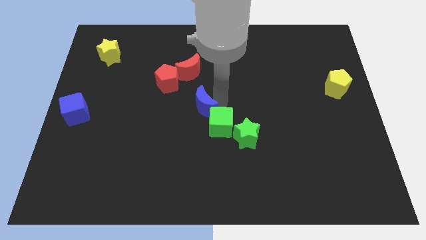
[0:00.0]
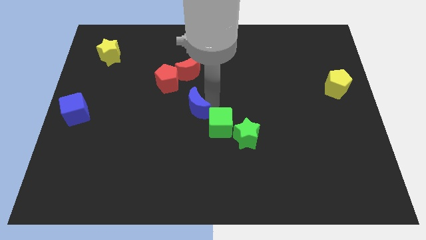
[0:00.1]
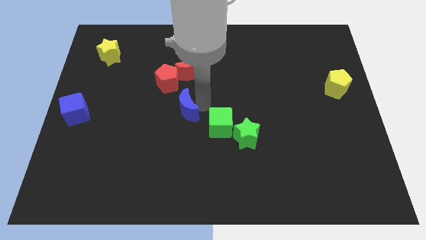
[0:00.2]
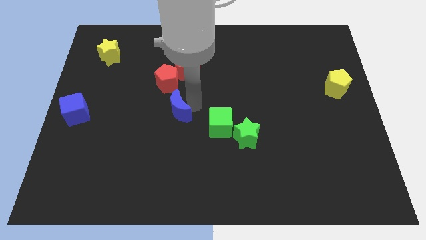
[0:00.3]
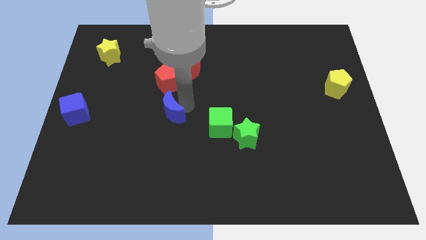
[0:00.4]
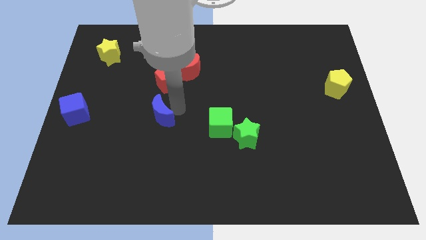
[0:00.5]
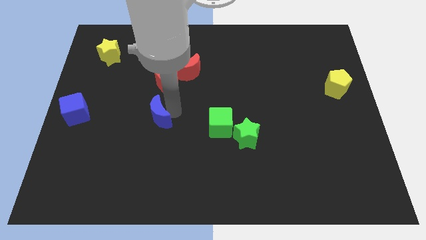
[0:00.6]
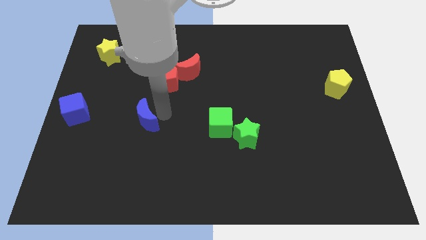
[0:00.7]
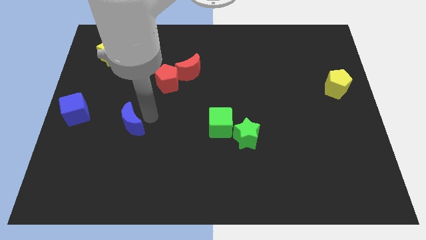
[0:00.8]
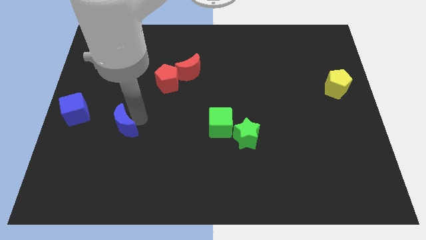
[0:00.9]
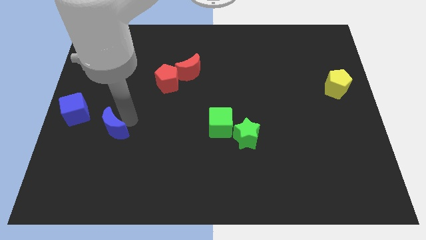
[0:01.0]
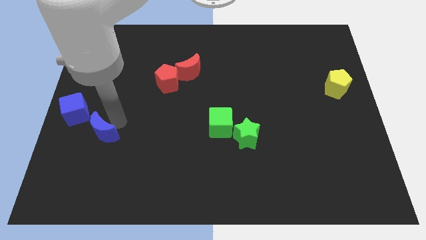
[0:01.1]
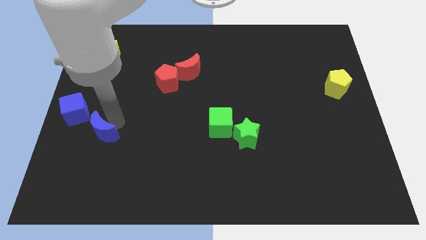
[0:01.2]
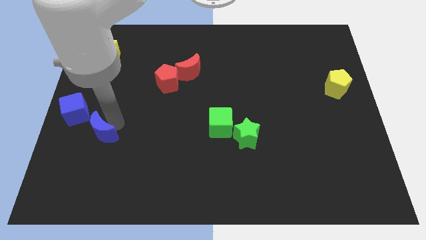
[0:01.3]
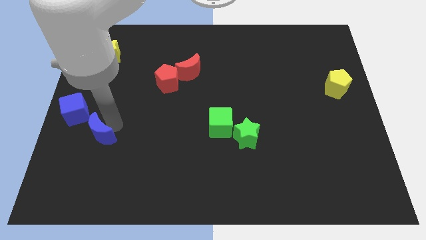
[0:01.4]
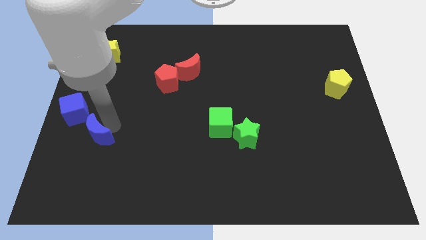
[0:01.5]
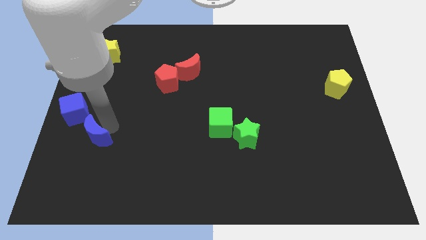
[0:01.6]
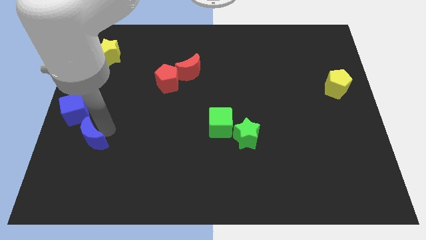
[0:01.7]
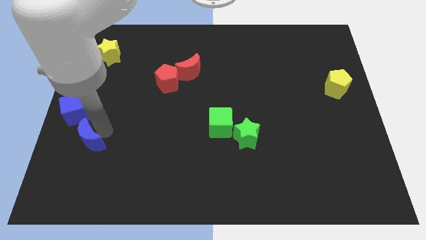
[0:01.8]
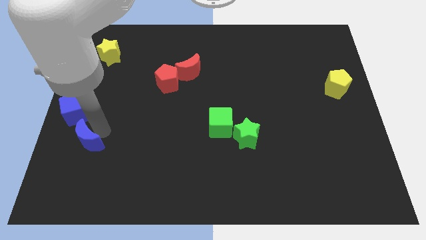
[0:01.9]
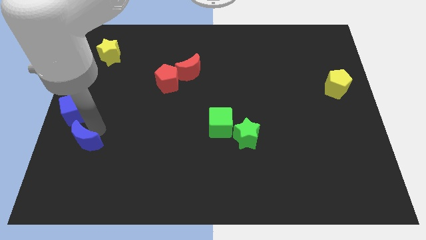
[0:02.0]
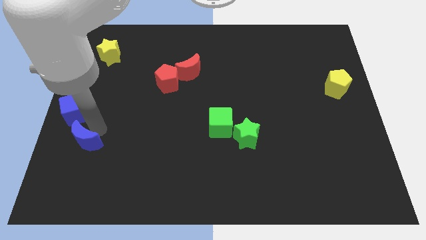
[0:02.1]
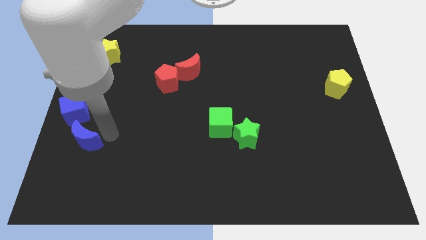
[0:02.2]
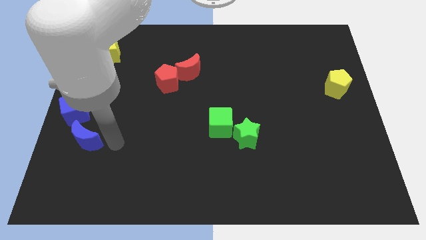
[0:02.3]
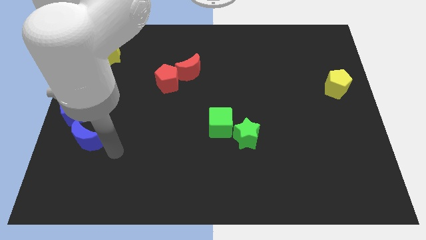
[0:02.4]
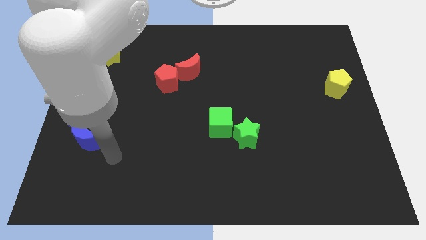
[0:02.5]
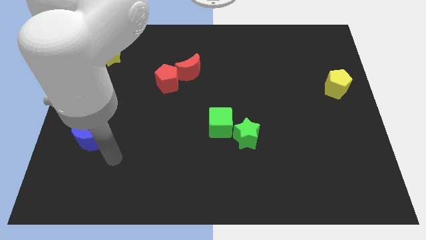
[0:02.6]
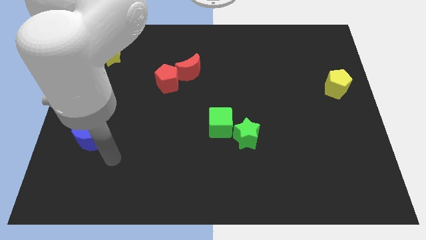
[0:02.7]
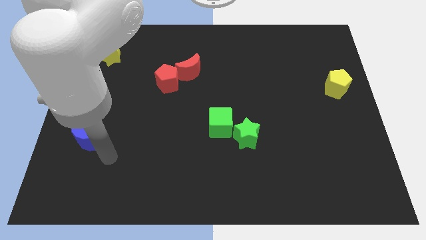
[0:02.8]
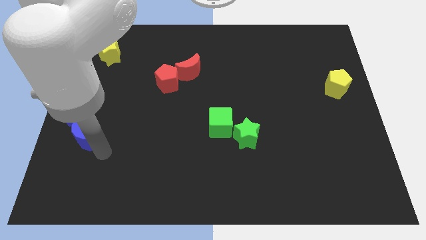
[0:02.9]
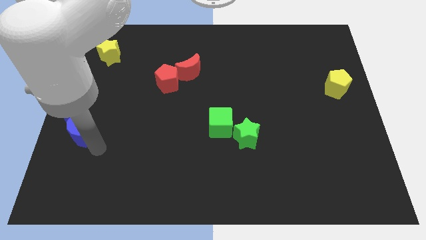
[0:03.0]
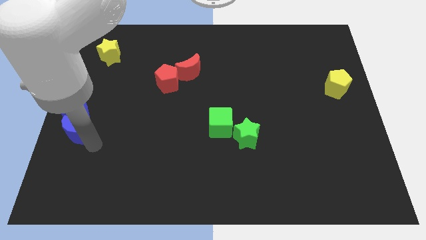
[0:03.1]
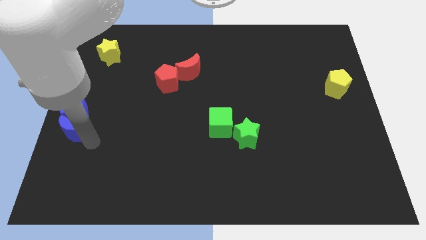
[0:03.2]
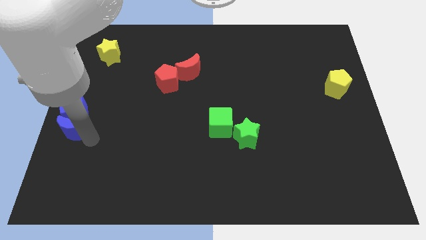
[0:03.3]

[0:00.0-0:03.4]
move the blue moon below the blue cube

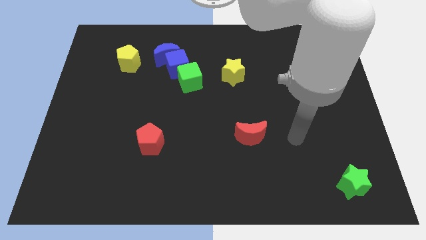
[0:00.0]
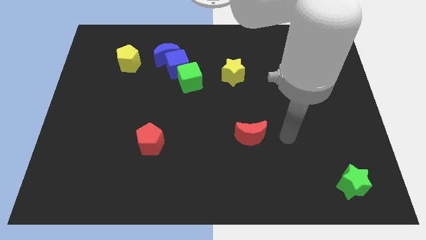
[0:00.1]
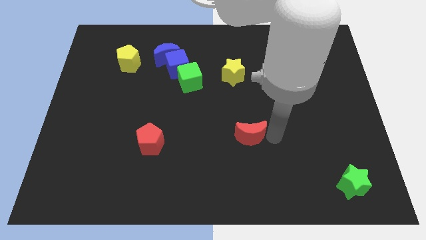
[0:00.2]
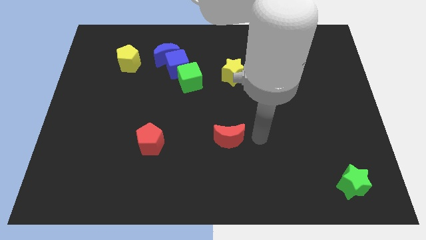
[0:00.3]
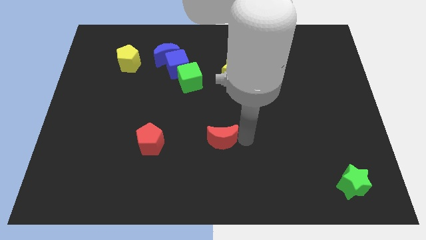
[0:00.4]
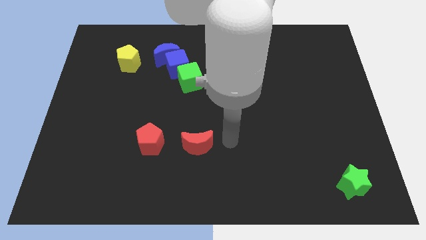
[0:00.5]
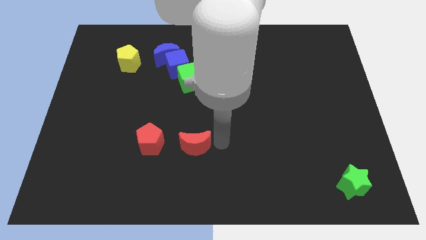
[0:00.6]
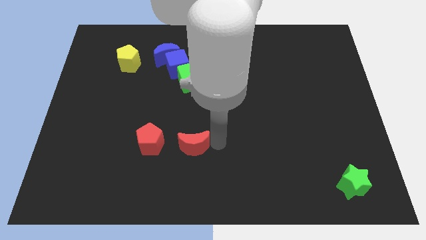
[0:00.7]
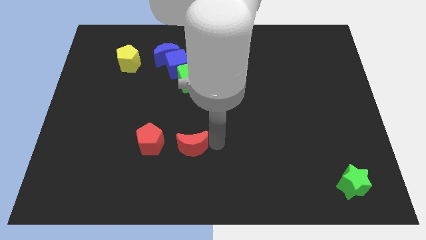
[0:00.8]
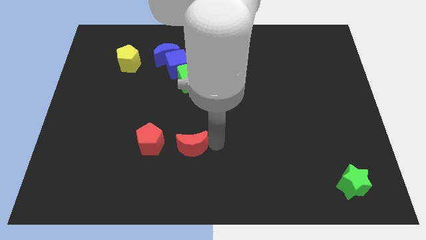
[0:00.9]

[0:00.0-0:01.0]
place the red moon right to the red pentagon

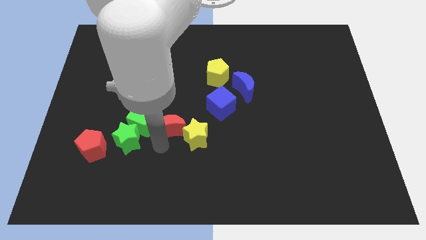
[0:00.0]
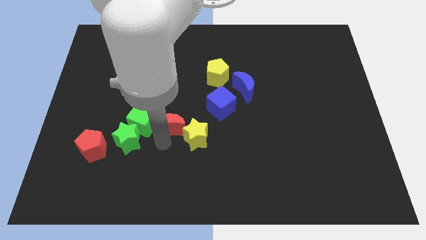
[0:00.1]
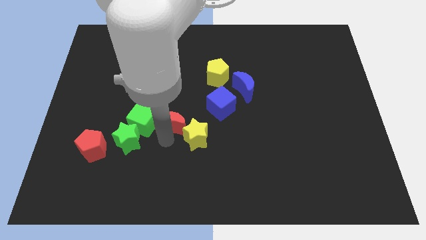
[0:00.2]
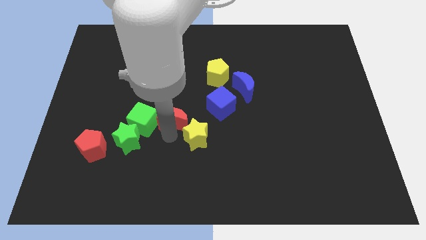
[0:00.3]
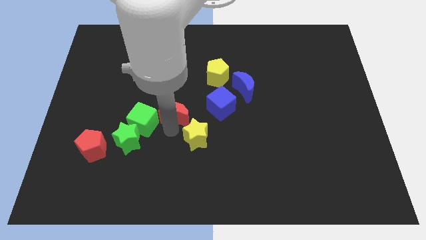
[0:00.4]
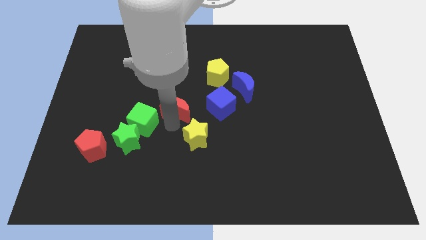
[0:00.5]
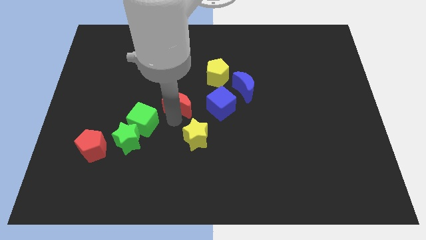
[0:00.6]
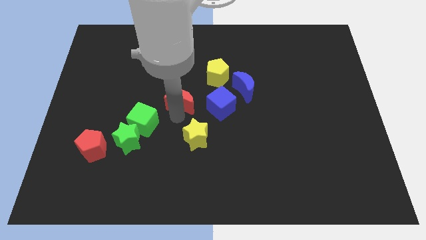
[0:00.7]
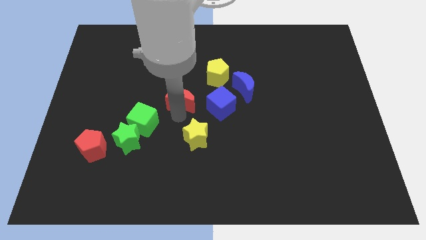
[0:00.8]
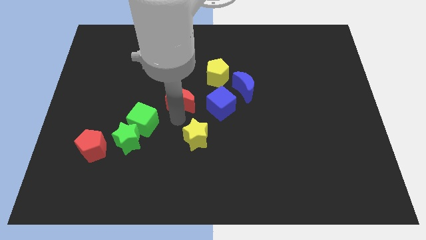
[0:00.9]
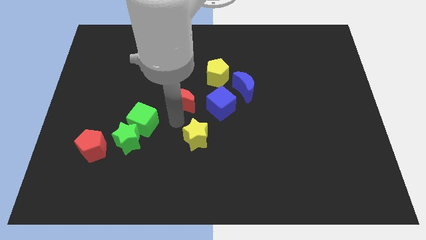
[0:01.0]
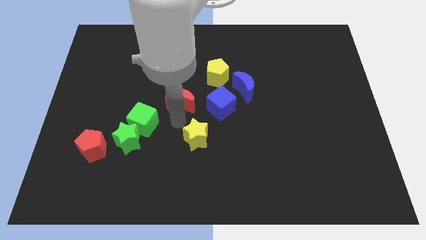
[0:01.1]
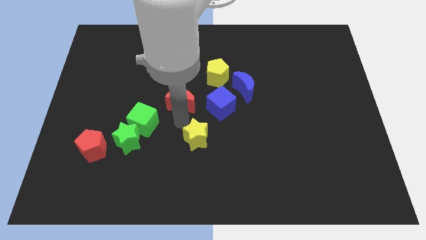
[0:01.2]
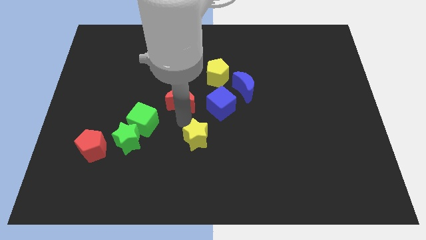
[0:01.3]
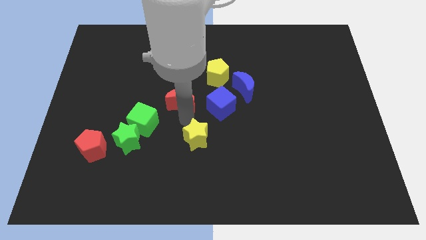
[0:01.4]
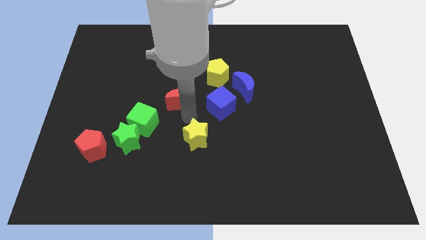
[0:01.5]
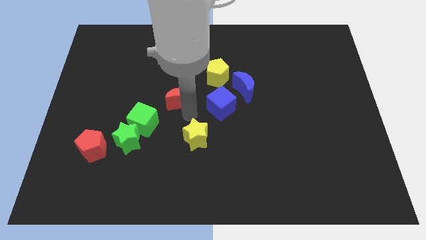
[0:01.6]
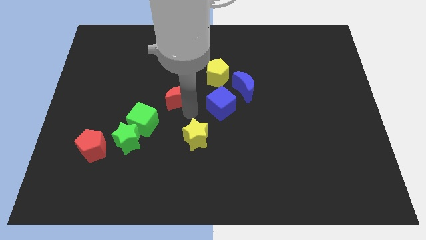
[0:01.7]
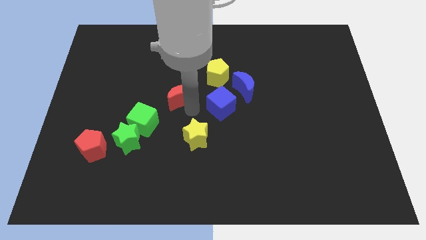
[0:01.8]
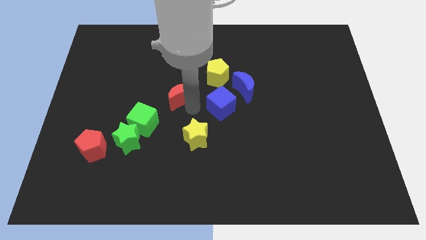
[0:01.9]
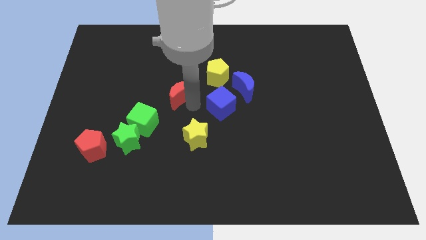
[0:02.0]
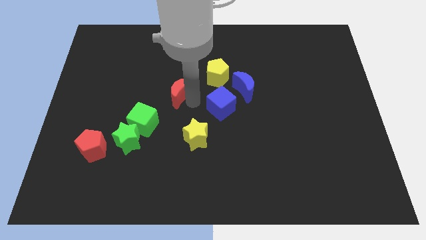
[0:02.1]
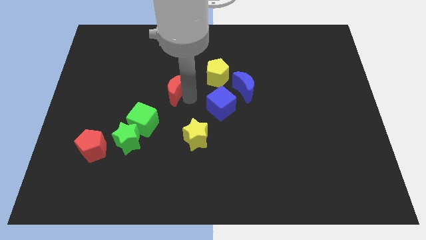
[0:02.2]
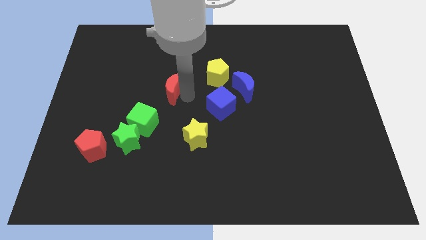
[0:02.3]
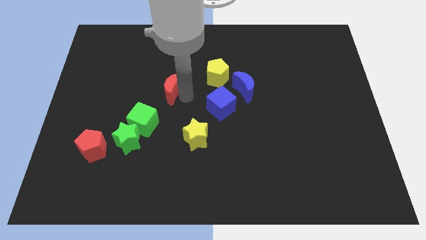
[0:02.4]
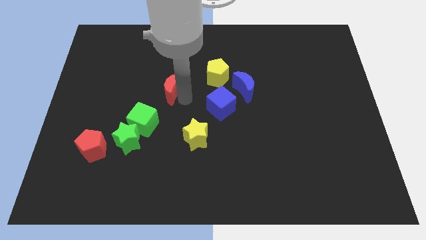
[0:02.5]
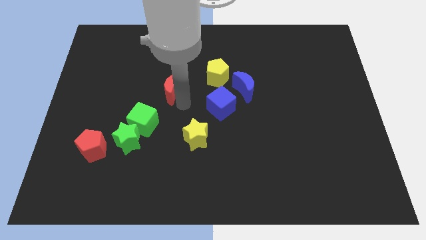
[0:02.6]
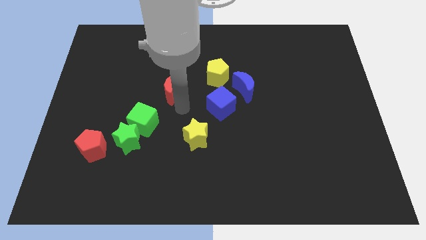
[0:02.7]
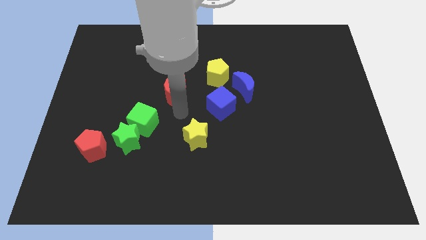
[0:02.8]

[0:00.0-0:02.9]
place the red crescent left to the blue cube

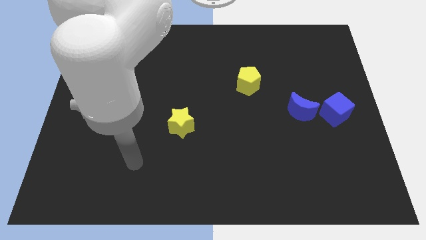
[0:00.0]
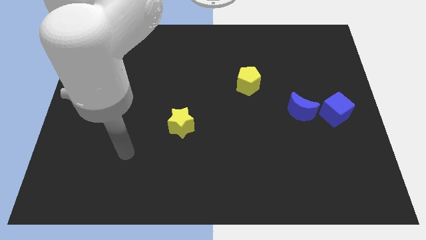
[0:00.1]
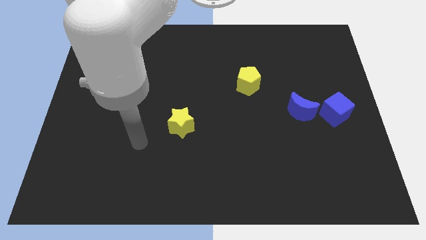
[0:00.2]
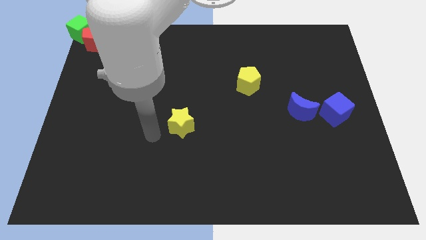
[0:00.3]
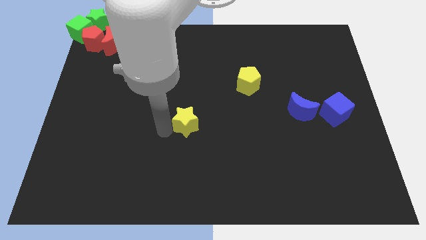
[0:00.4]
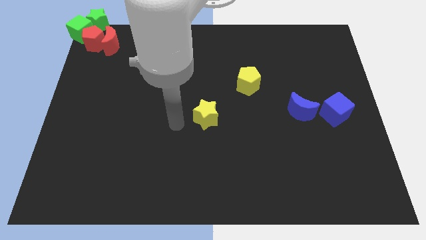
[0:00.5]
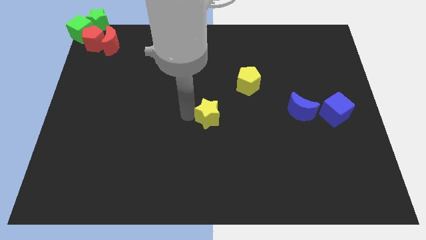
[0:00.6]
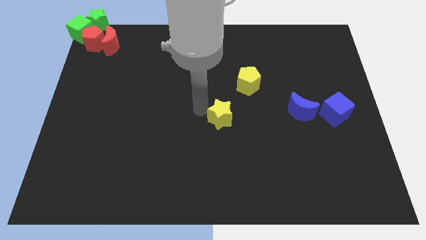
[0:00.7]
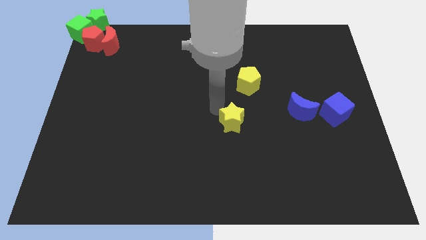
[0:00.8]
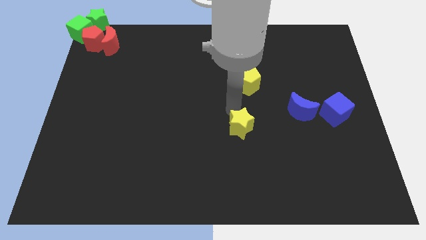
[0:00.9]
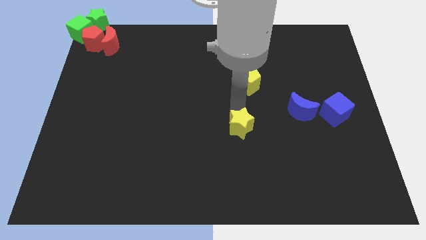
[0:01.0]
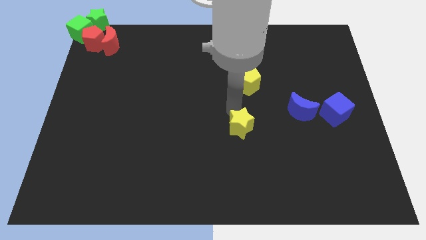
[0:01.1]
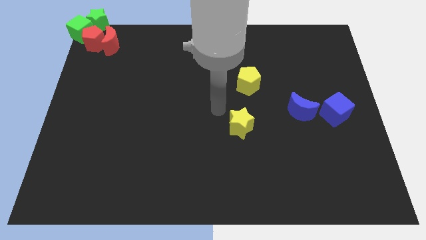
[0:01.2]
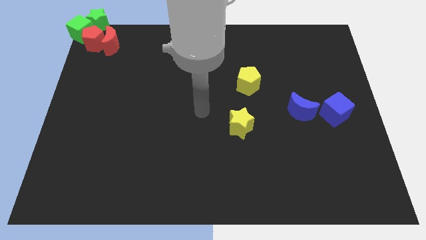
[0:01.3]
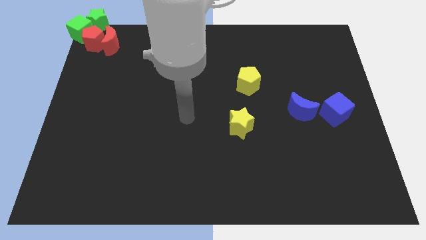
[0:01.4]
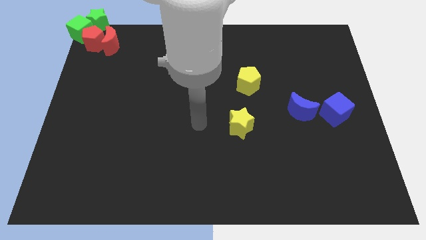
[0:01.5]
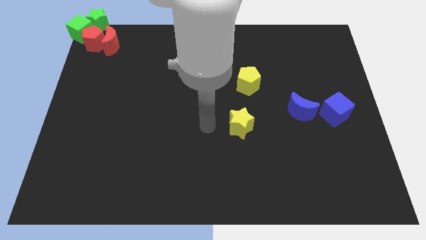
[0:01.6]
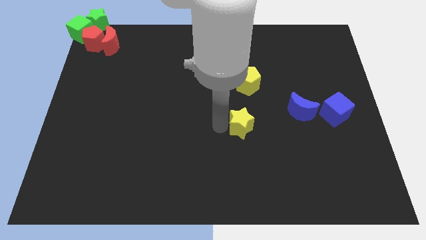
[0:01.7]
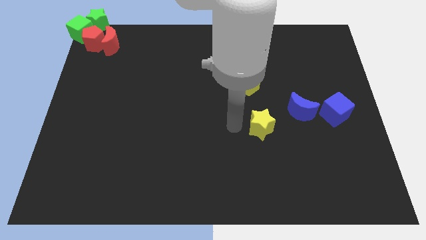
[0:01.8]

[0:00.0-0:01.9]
move the yellow star vertically to the bottom of the yellow pentagon
